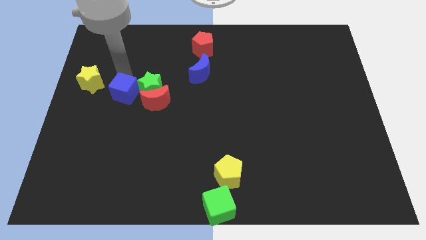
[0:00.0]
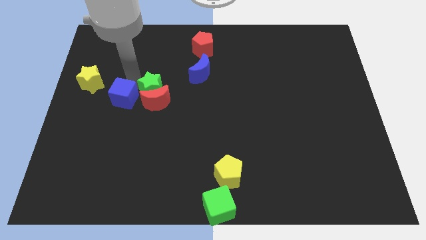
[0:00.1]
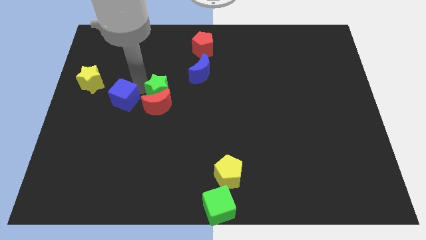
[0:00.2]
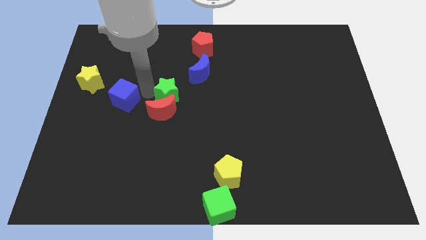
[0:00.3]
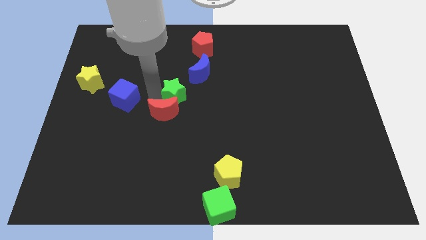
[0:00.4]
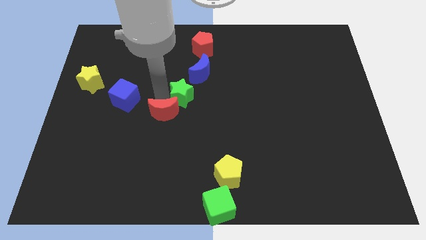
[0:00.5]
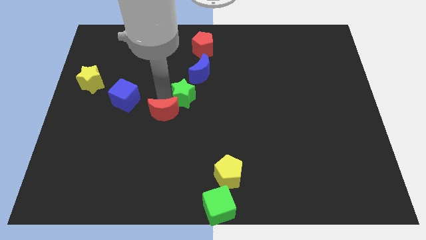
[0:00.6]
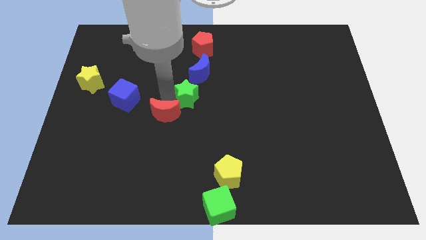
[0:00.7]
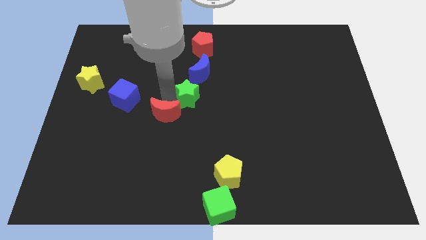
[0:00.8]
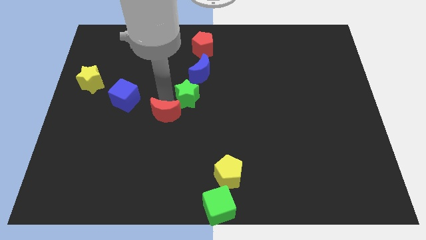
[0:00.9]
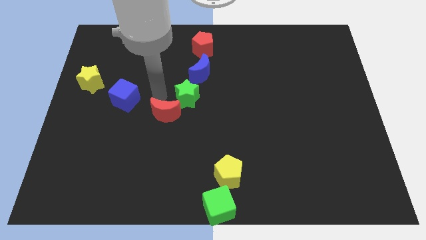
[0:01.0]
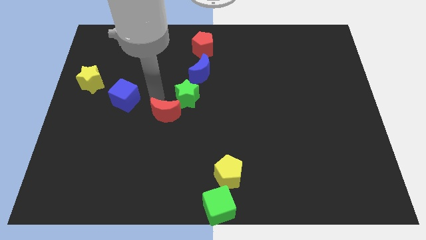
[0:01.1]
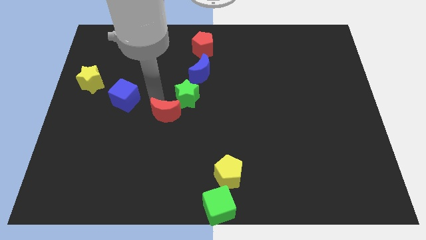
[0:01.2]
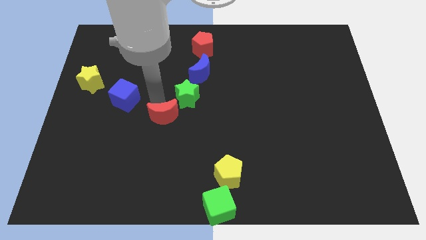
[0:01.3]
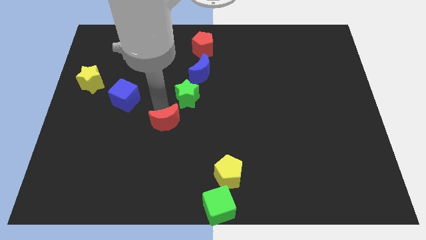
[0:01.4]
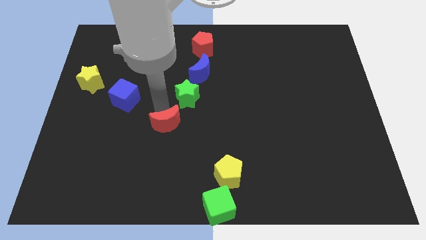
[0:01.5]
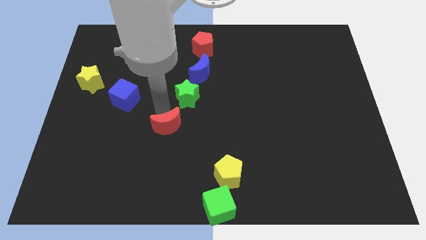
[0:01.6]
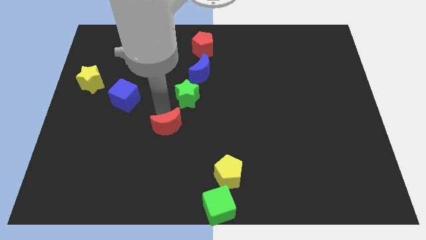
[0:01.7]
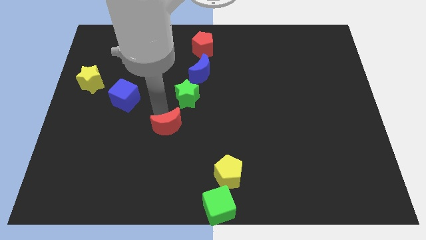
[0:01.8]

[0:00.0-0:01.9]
place the red crescent below the green star

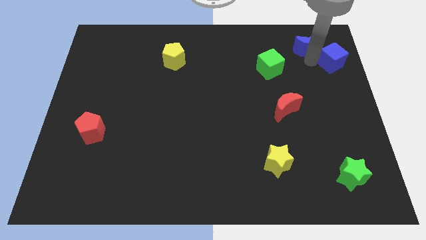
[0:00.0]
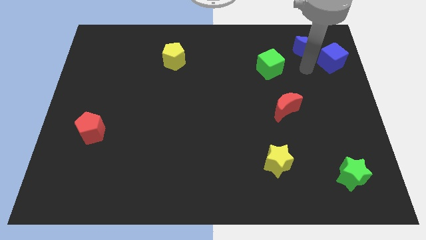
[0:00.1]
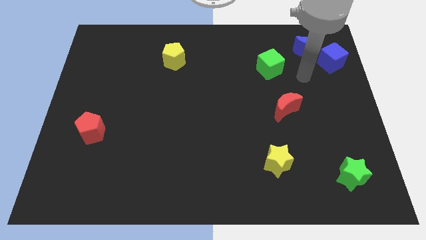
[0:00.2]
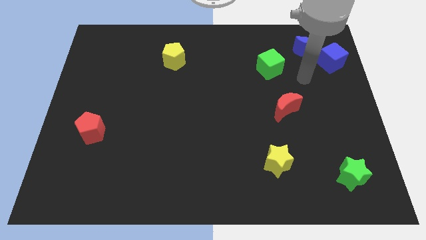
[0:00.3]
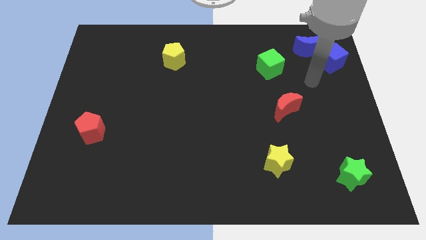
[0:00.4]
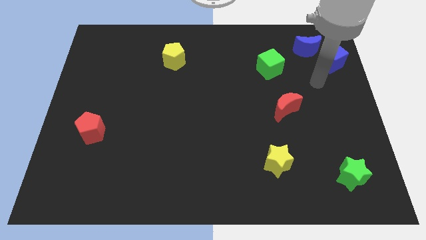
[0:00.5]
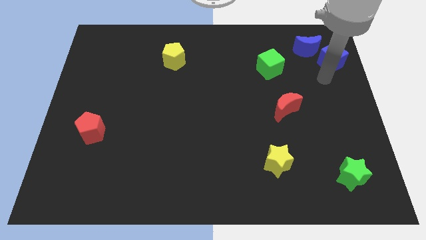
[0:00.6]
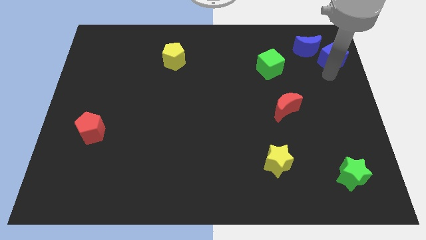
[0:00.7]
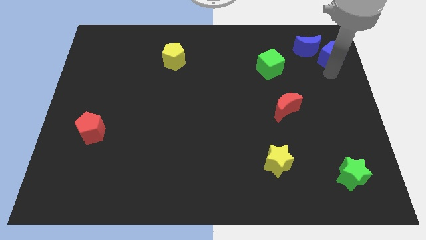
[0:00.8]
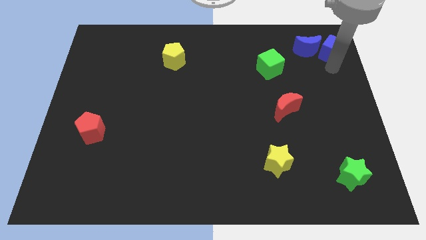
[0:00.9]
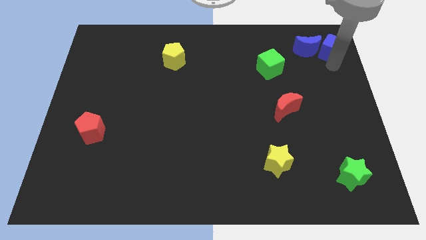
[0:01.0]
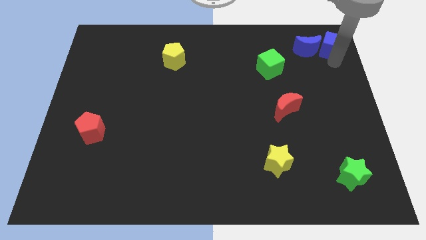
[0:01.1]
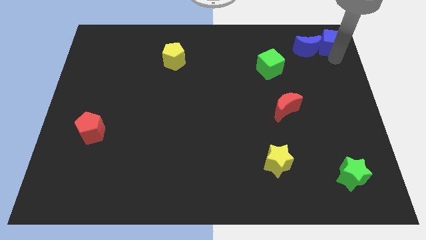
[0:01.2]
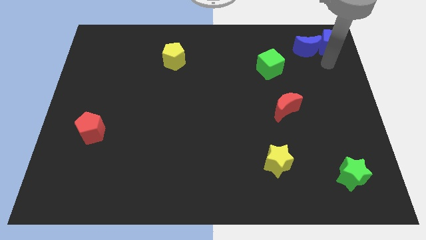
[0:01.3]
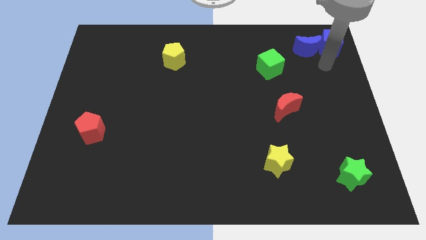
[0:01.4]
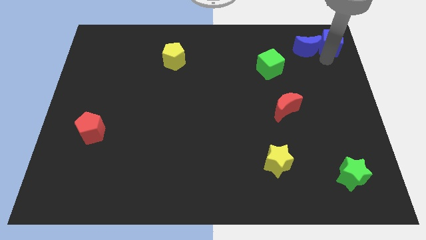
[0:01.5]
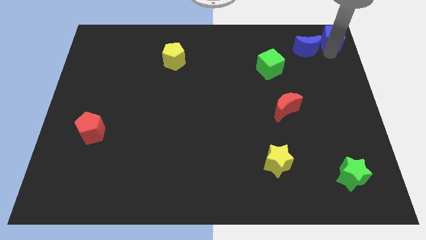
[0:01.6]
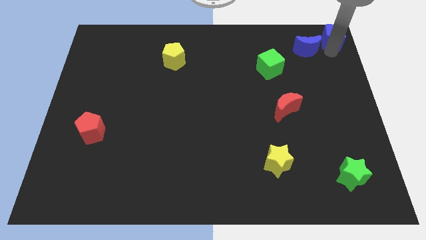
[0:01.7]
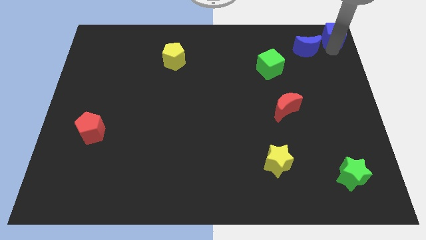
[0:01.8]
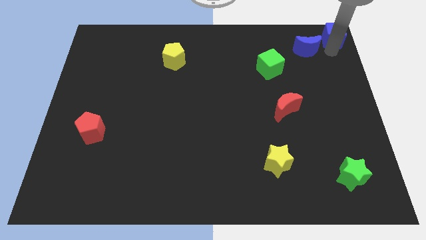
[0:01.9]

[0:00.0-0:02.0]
push the blue cube towards the top right of the board

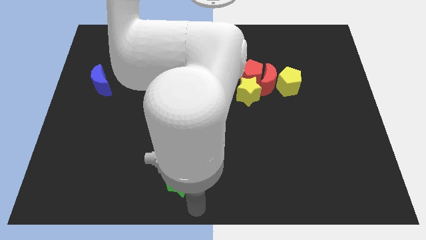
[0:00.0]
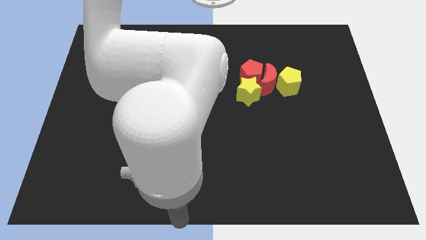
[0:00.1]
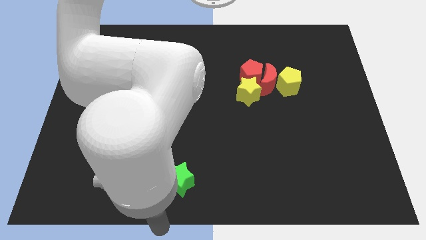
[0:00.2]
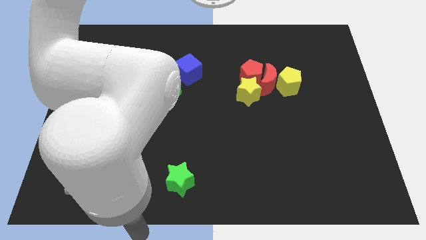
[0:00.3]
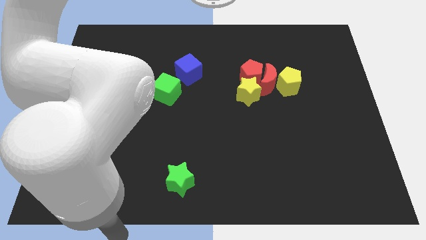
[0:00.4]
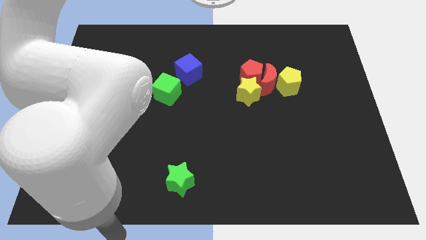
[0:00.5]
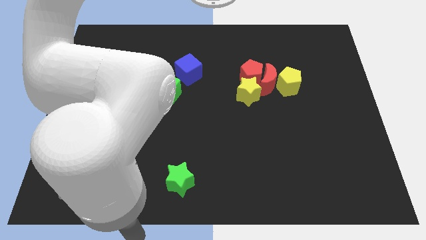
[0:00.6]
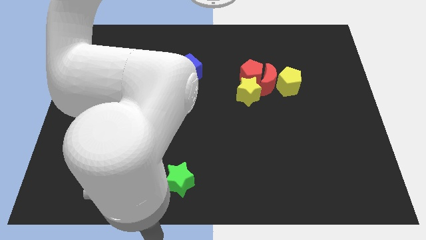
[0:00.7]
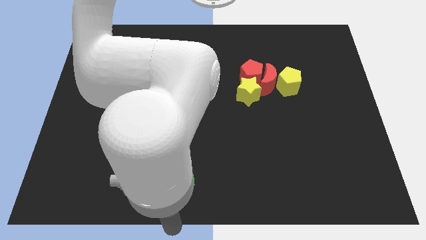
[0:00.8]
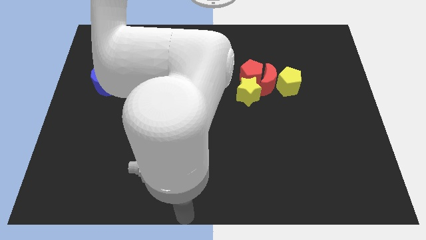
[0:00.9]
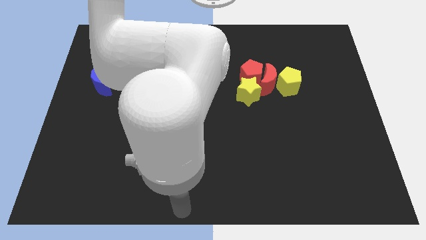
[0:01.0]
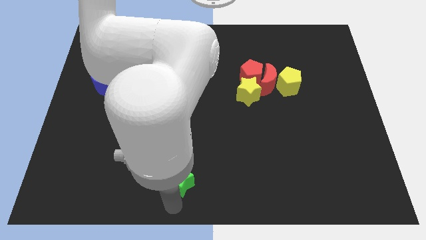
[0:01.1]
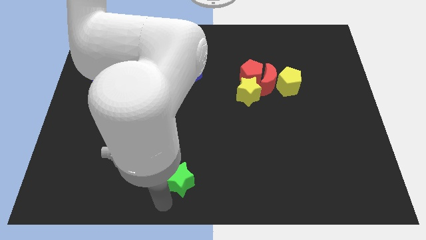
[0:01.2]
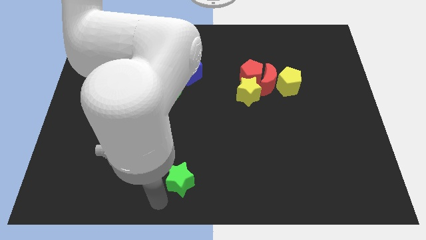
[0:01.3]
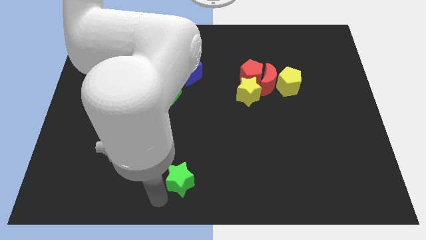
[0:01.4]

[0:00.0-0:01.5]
move your hand at the bottom left of the green star

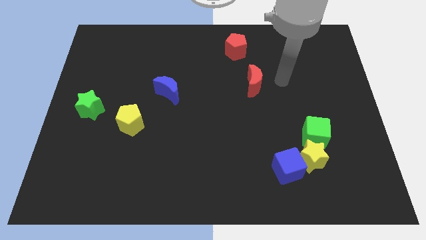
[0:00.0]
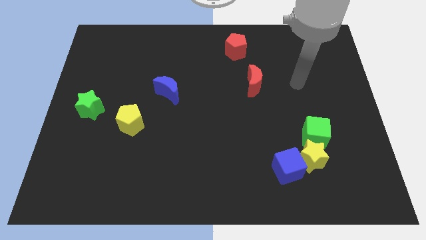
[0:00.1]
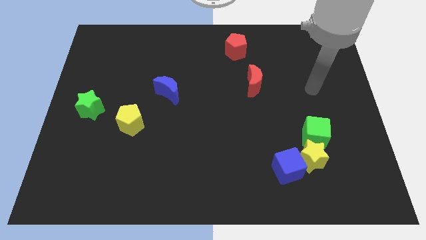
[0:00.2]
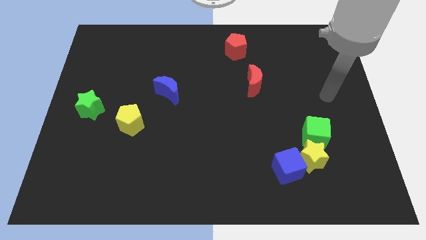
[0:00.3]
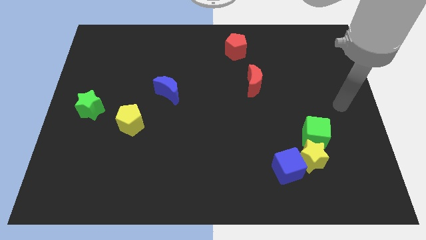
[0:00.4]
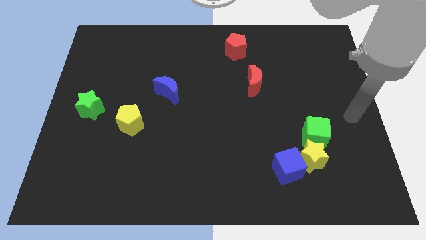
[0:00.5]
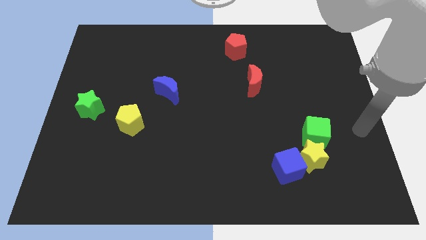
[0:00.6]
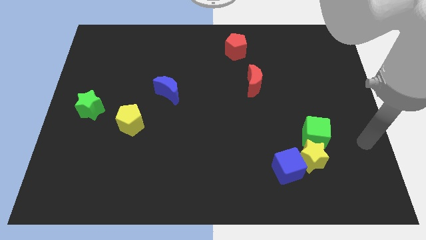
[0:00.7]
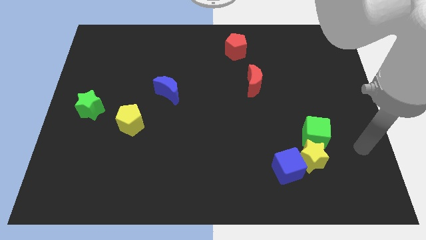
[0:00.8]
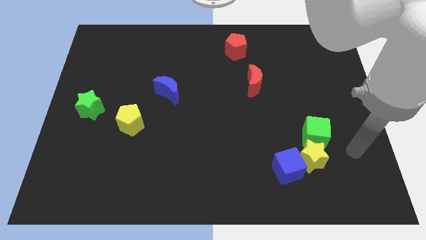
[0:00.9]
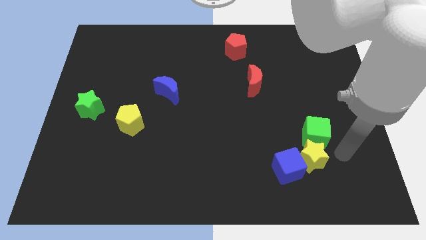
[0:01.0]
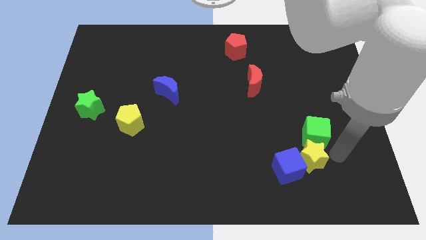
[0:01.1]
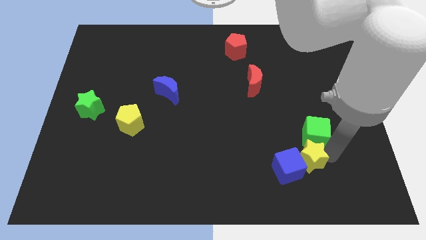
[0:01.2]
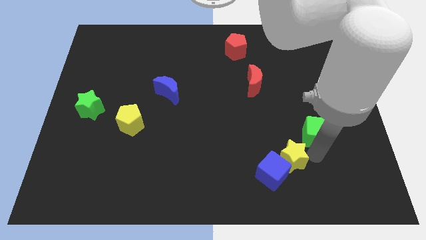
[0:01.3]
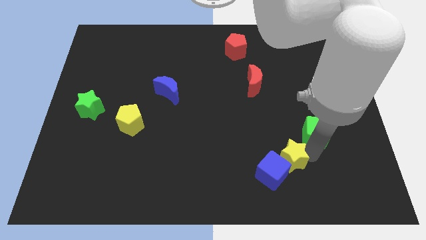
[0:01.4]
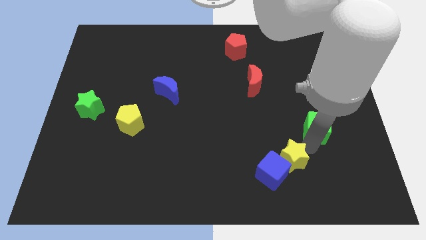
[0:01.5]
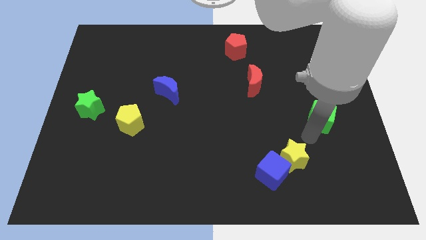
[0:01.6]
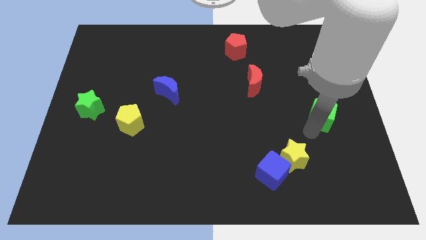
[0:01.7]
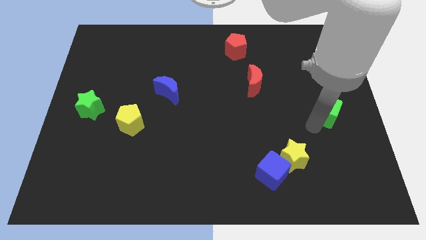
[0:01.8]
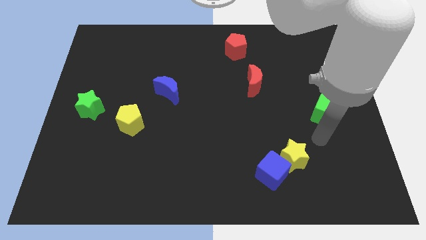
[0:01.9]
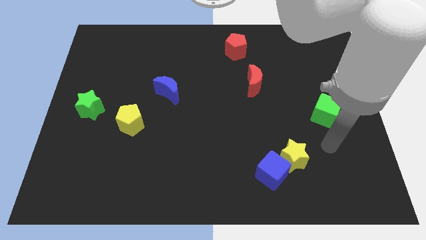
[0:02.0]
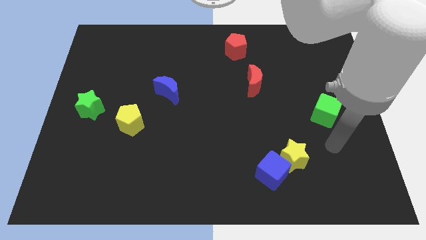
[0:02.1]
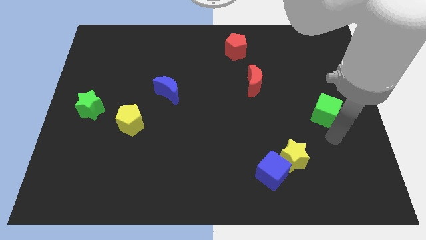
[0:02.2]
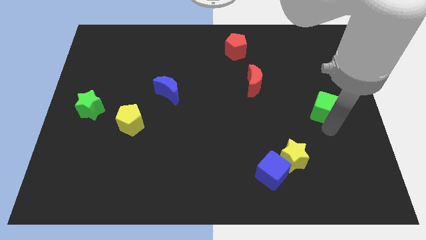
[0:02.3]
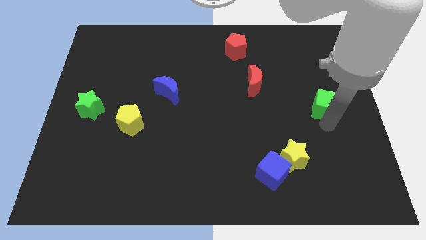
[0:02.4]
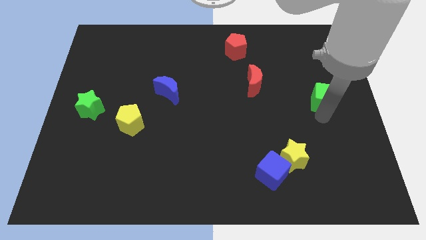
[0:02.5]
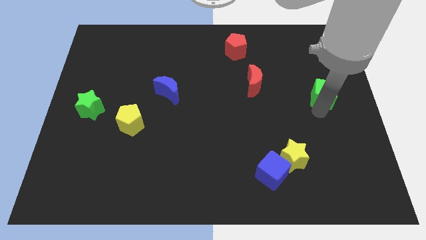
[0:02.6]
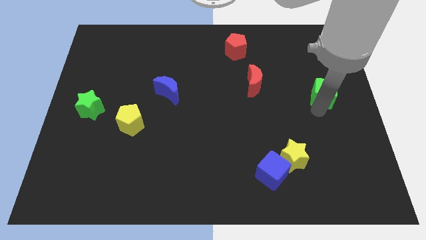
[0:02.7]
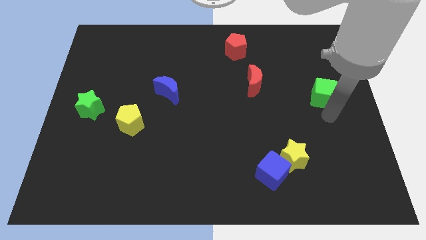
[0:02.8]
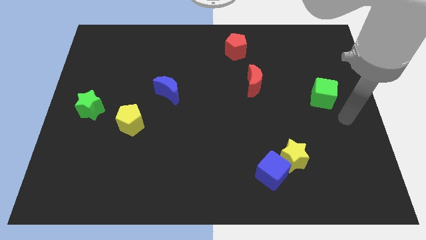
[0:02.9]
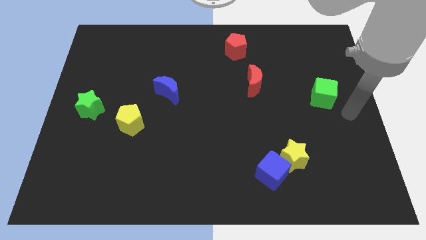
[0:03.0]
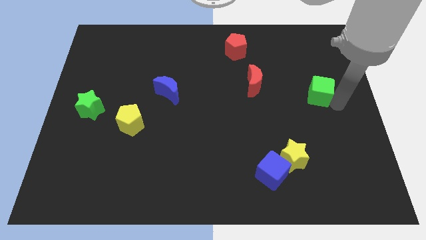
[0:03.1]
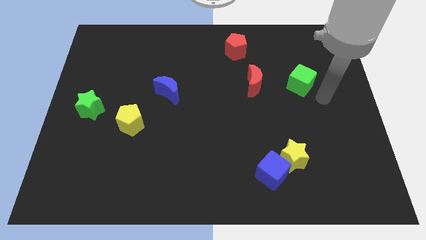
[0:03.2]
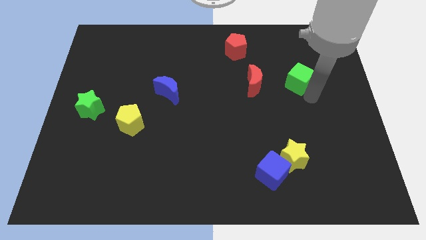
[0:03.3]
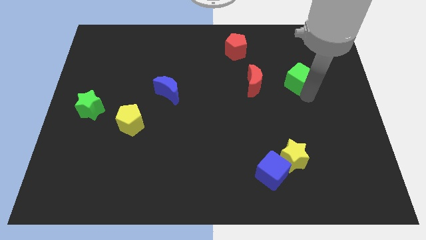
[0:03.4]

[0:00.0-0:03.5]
place the green cube at the right of the red crescent

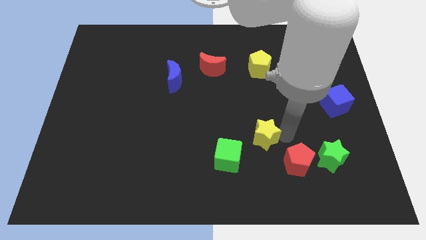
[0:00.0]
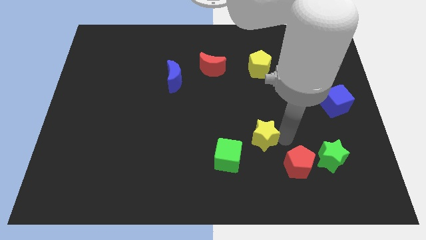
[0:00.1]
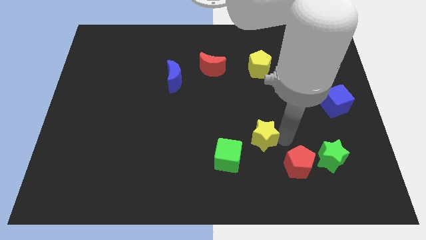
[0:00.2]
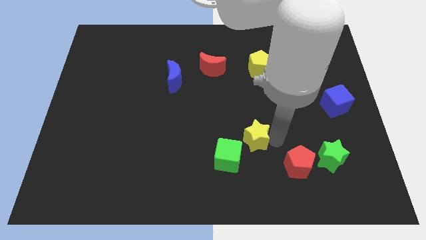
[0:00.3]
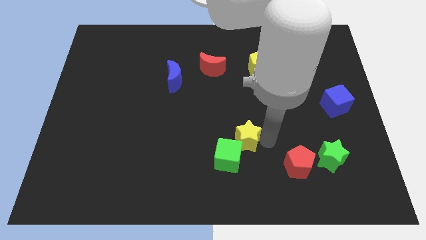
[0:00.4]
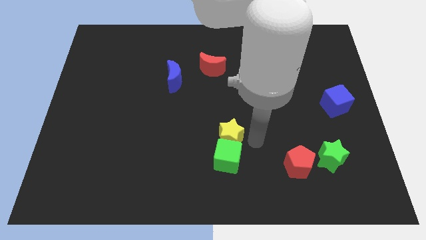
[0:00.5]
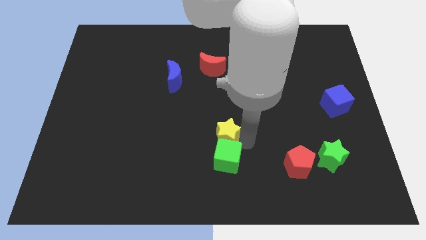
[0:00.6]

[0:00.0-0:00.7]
place the yellow star above the green cube
